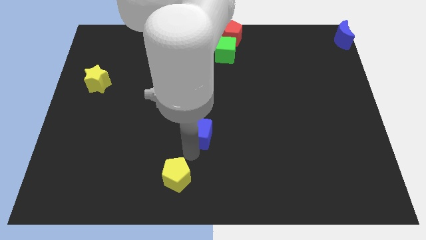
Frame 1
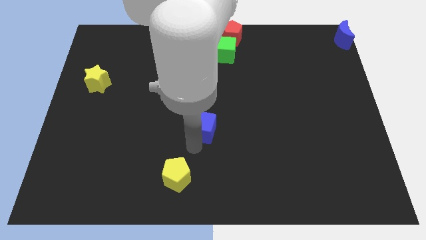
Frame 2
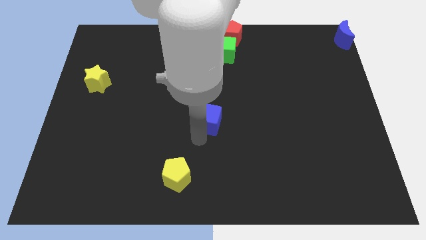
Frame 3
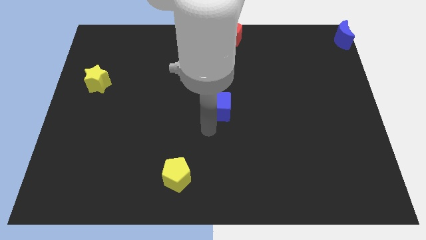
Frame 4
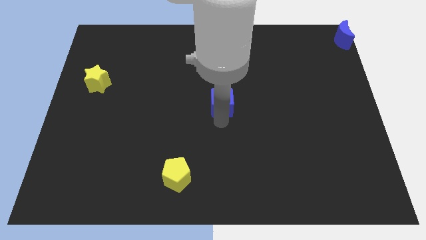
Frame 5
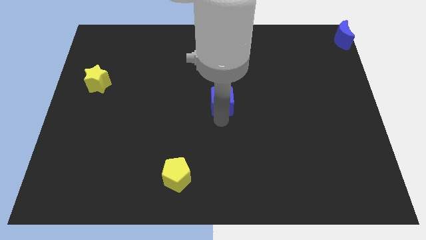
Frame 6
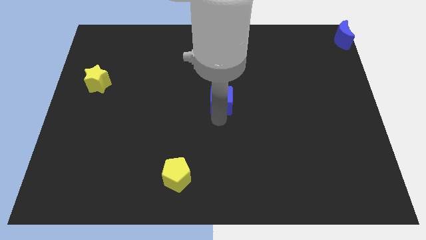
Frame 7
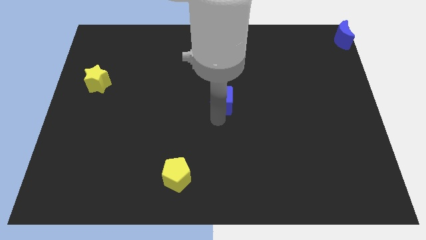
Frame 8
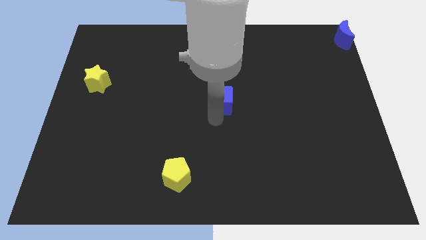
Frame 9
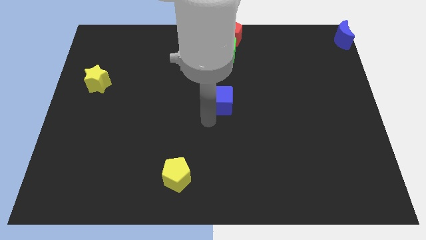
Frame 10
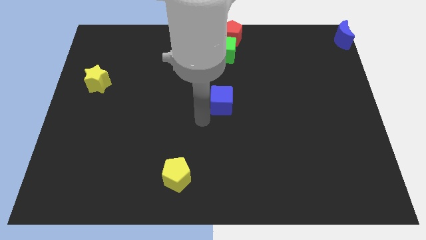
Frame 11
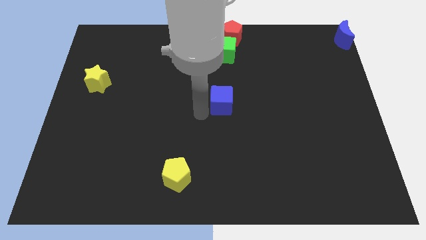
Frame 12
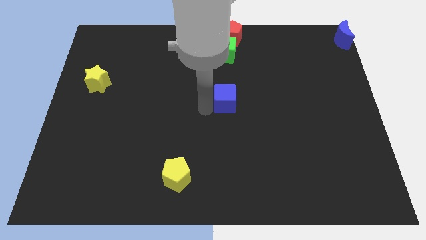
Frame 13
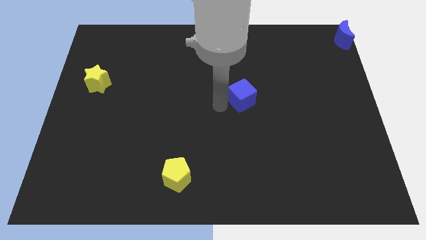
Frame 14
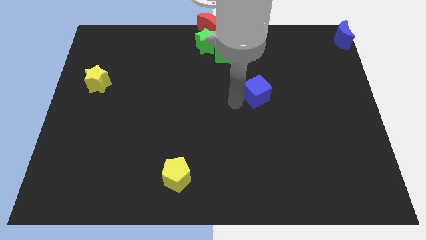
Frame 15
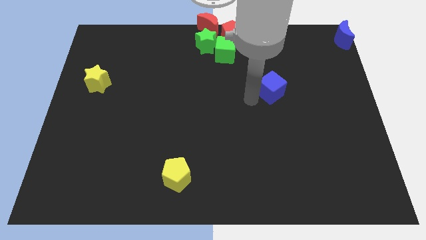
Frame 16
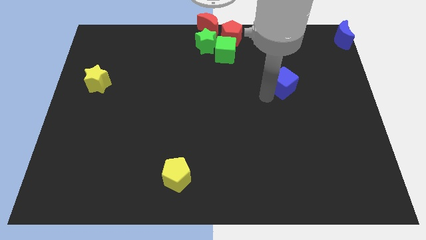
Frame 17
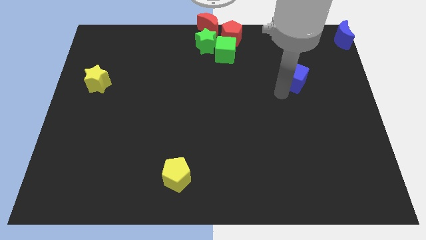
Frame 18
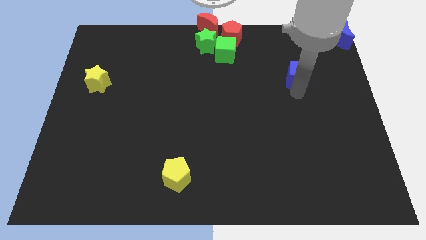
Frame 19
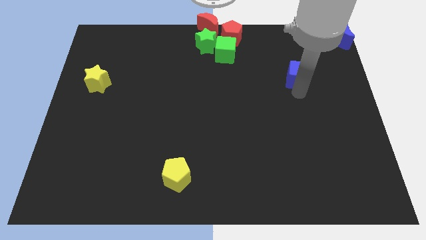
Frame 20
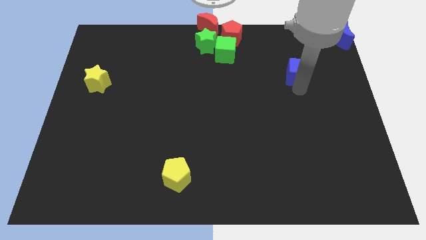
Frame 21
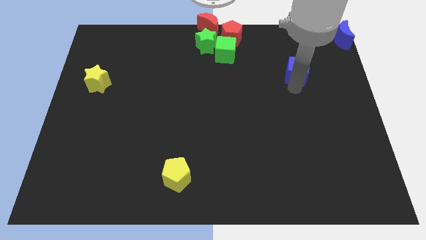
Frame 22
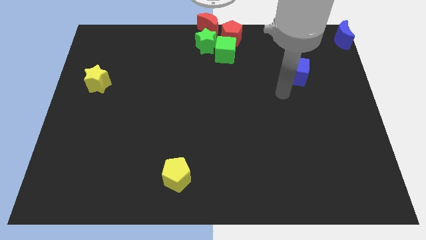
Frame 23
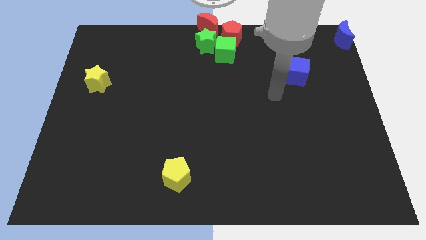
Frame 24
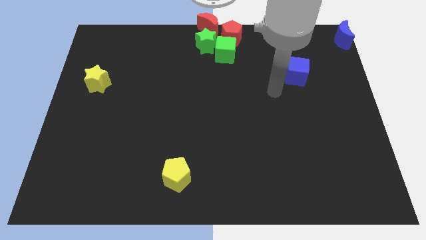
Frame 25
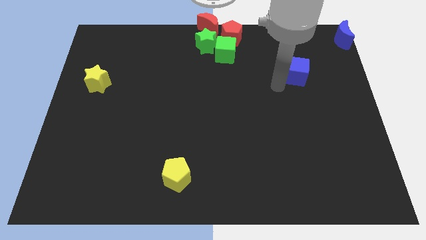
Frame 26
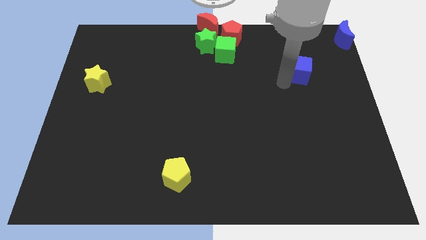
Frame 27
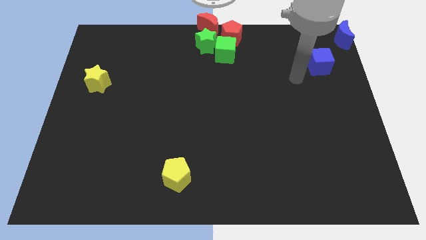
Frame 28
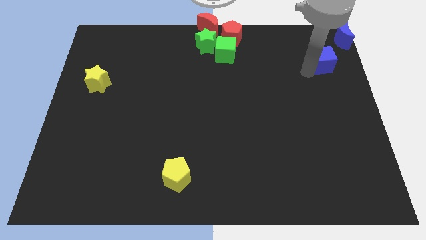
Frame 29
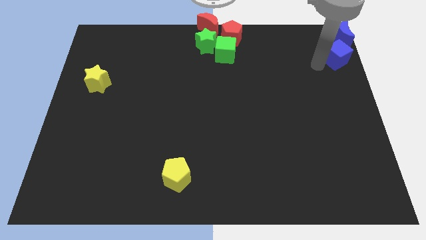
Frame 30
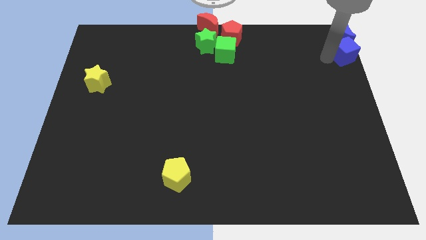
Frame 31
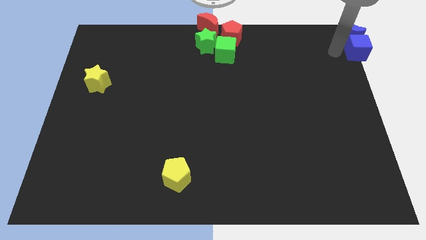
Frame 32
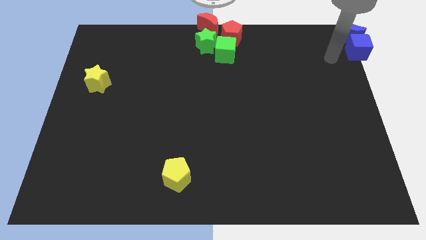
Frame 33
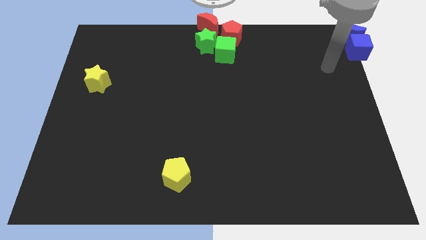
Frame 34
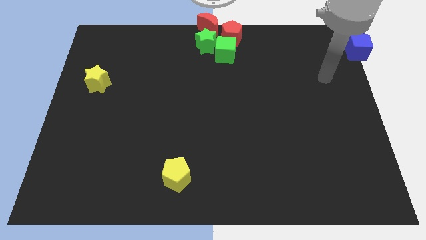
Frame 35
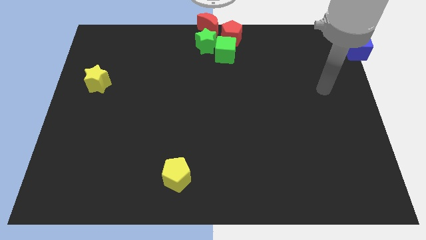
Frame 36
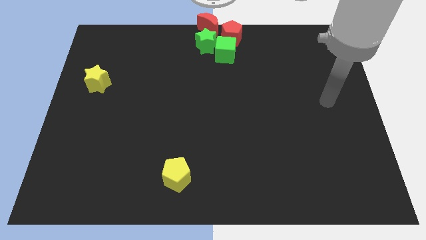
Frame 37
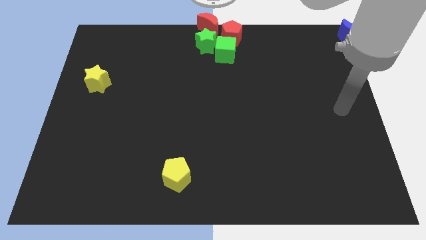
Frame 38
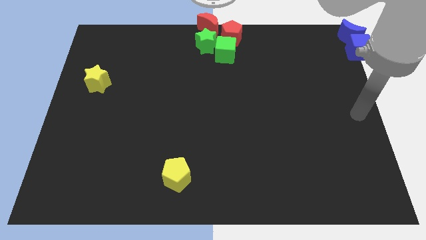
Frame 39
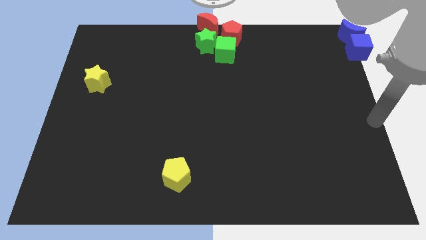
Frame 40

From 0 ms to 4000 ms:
move the blue cube under to the blue crescent

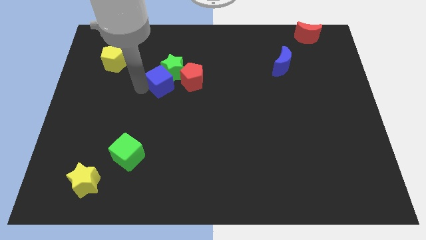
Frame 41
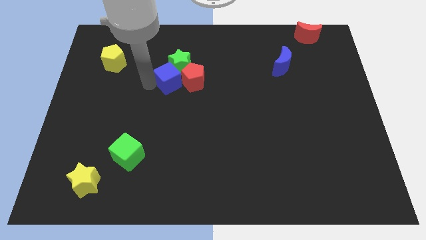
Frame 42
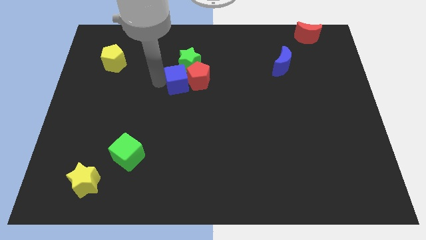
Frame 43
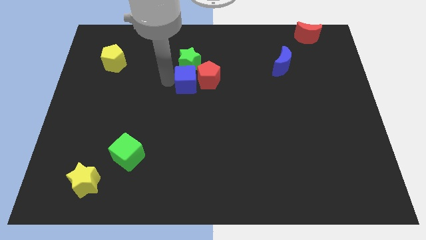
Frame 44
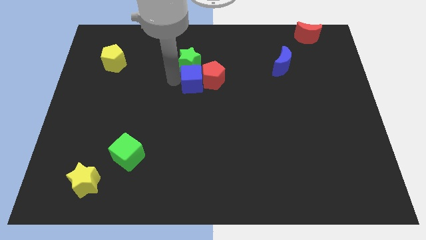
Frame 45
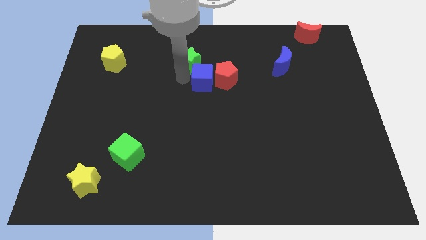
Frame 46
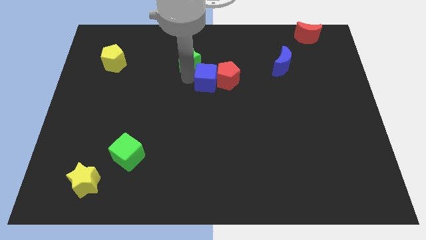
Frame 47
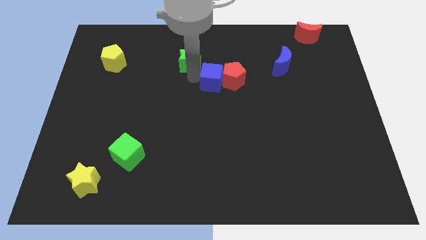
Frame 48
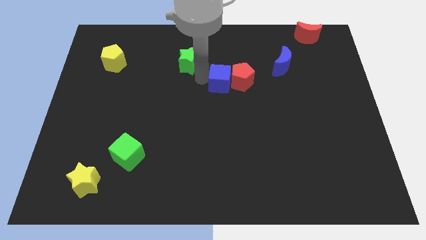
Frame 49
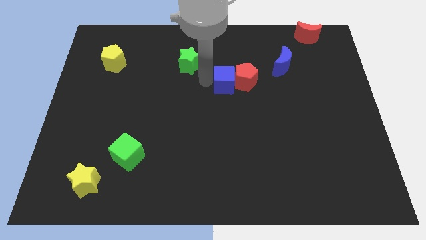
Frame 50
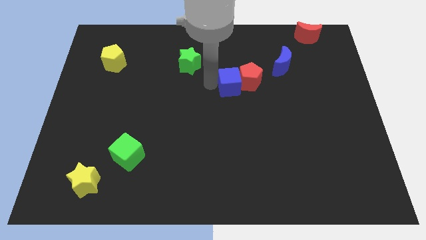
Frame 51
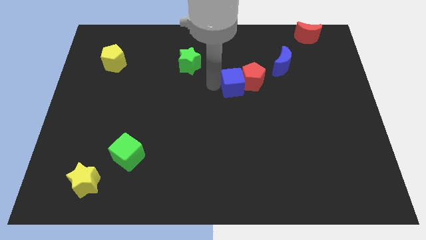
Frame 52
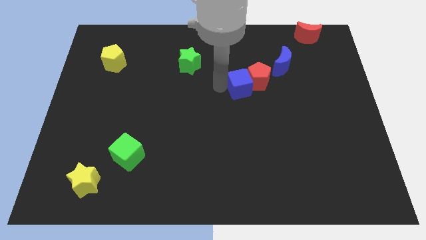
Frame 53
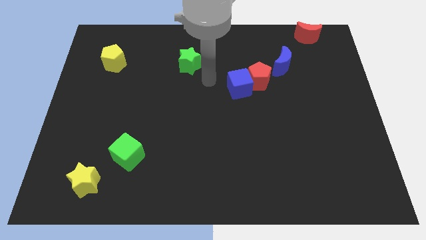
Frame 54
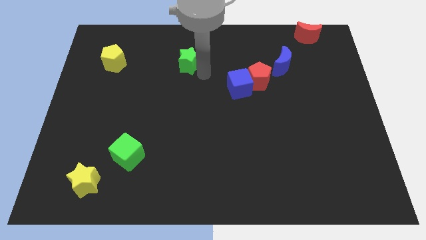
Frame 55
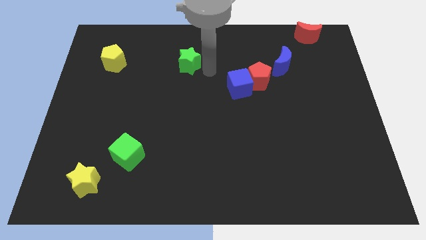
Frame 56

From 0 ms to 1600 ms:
move the blue cube and red pentagon close to the blue moon

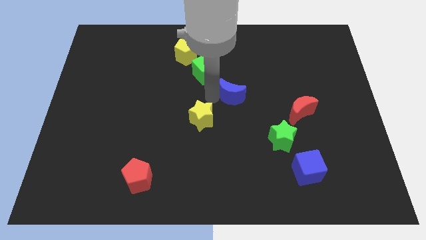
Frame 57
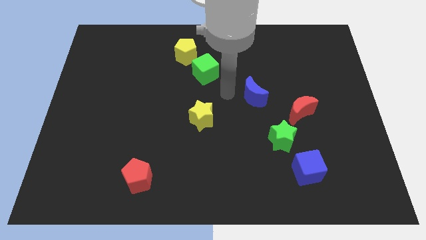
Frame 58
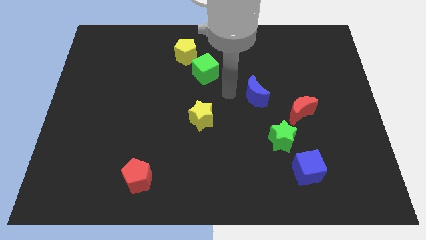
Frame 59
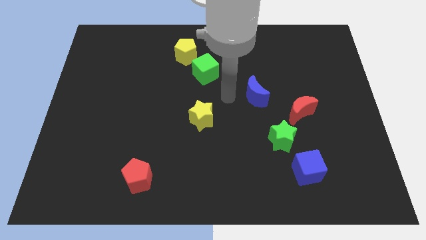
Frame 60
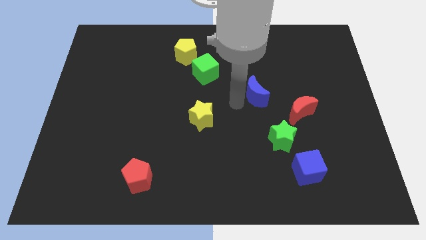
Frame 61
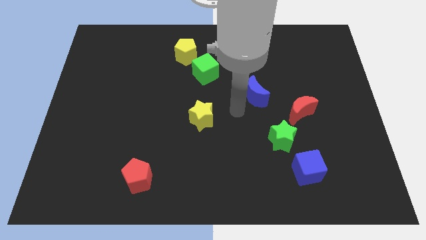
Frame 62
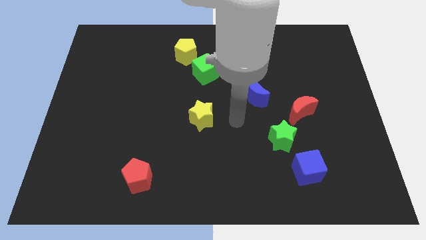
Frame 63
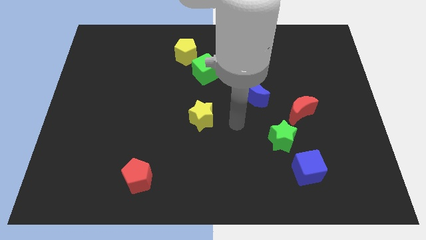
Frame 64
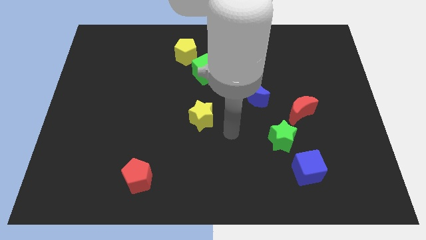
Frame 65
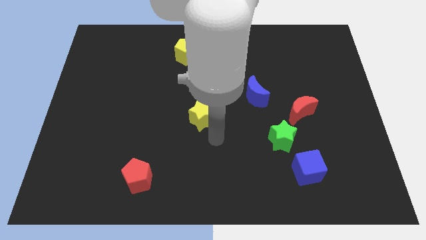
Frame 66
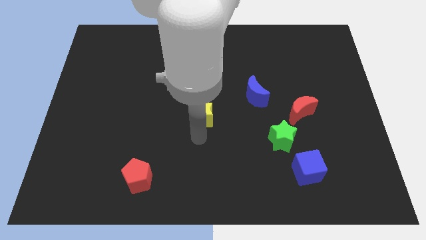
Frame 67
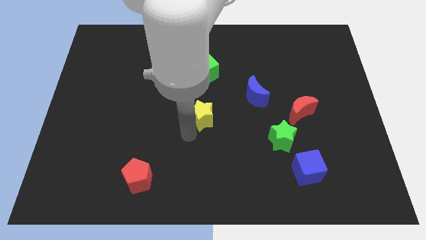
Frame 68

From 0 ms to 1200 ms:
push the blue crescent diagonally in between the red crescent and green cube

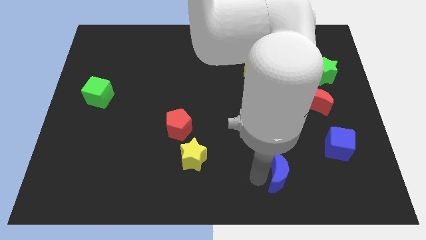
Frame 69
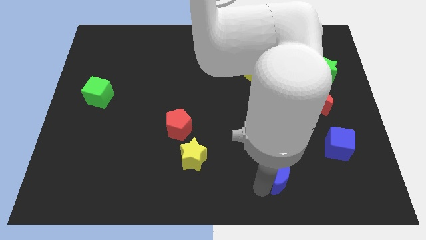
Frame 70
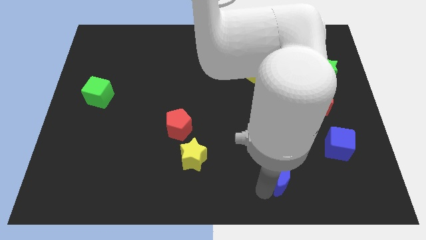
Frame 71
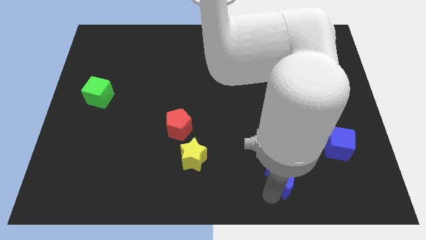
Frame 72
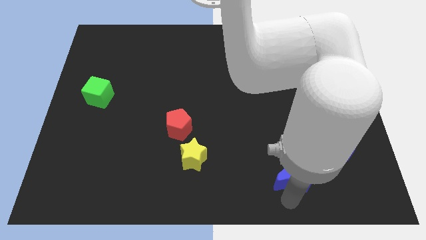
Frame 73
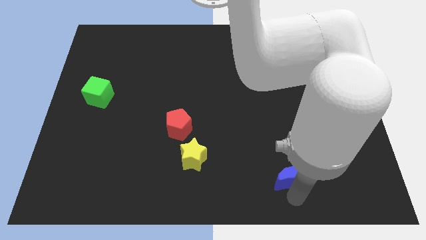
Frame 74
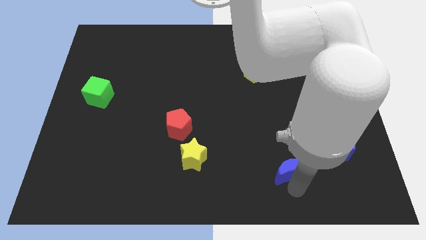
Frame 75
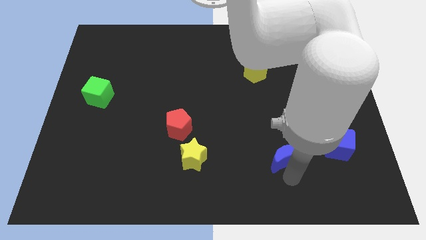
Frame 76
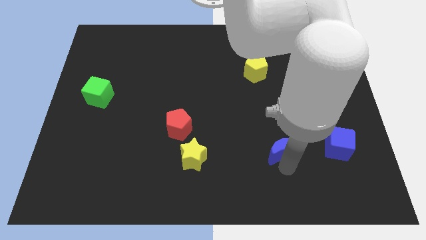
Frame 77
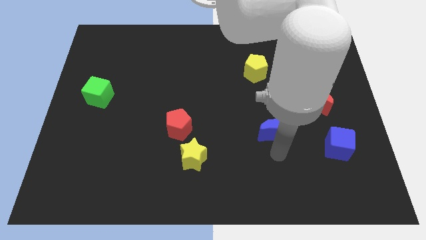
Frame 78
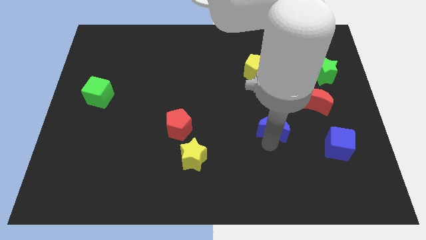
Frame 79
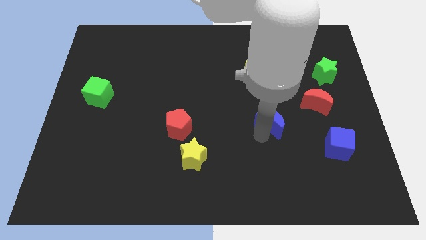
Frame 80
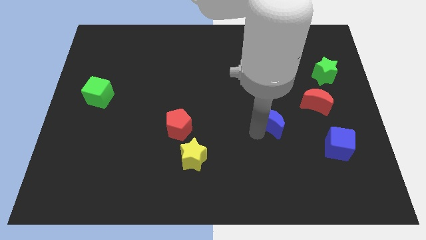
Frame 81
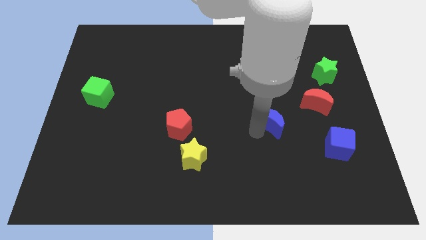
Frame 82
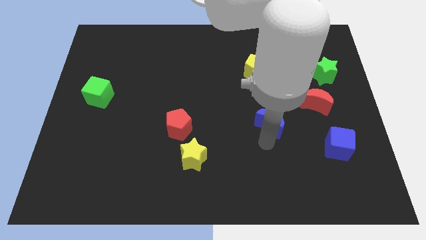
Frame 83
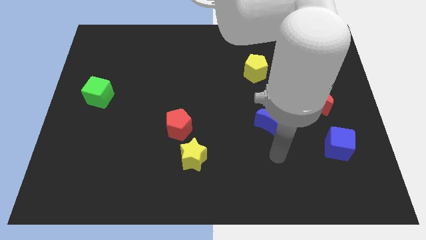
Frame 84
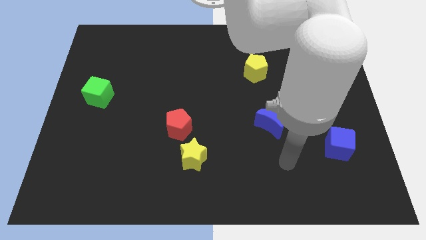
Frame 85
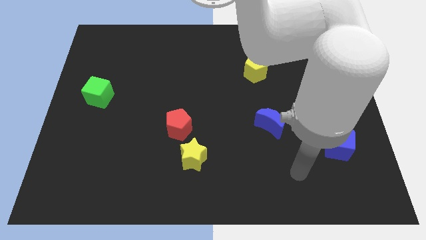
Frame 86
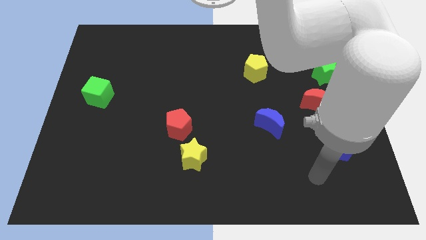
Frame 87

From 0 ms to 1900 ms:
place the blue crescent between yellow star and red moon

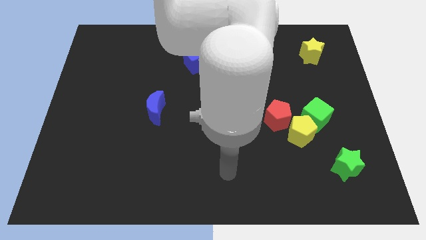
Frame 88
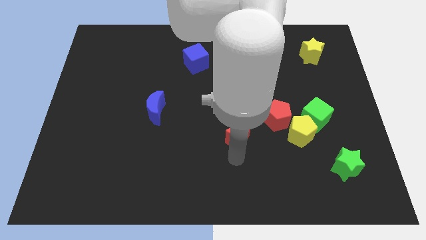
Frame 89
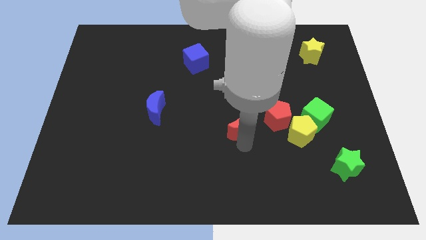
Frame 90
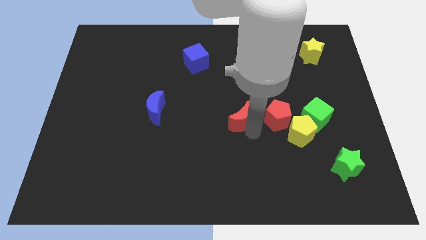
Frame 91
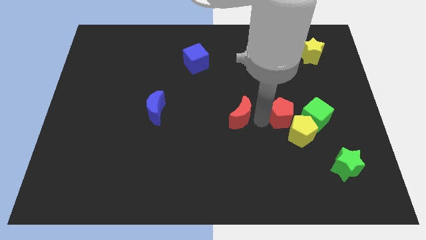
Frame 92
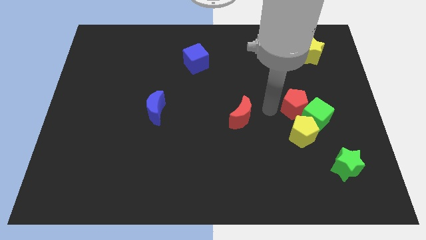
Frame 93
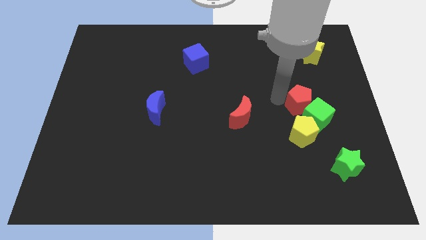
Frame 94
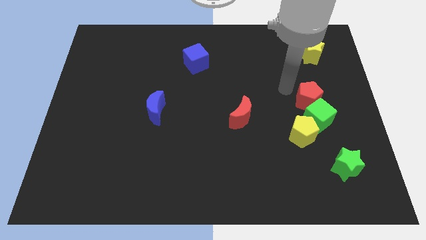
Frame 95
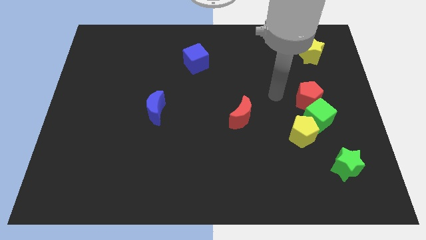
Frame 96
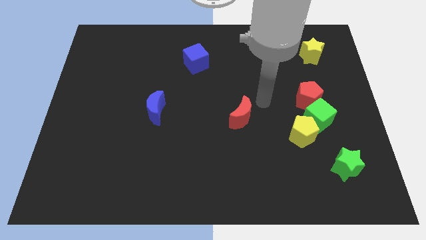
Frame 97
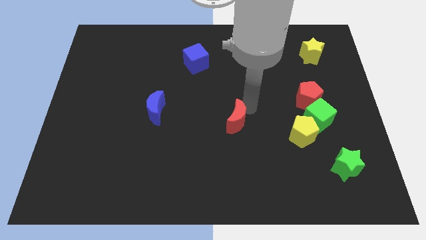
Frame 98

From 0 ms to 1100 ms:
place the red pentagon above the green cube
